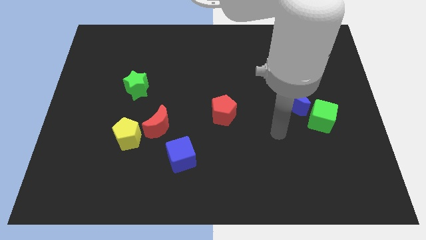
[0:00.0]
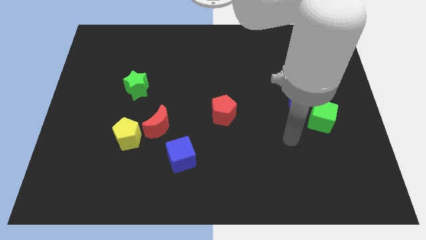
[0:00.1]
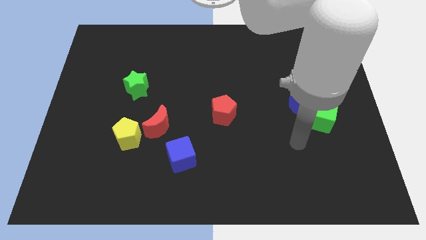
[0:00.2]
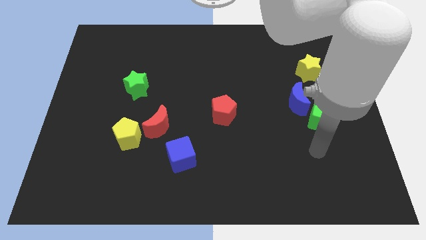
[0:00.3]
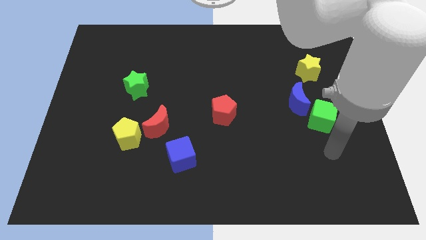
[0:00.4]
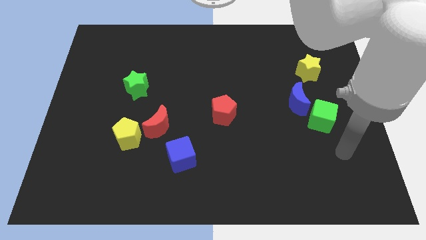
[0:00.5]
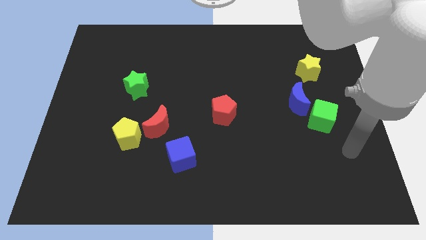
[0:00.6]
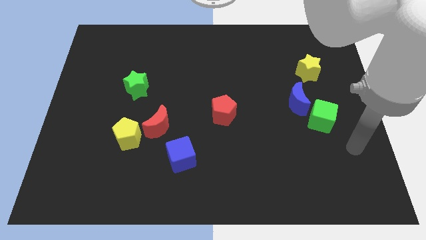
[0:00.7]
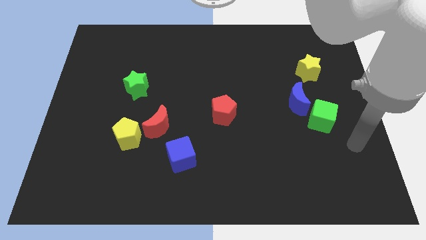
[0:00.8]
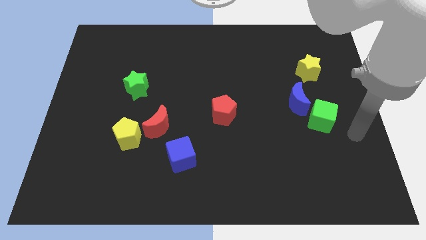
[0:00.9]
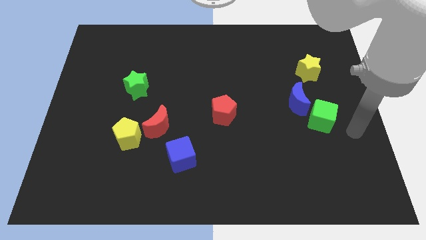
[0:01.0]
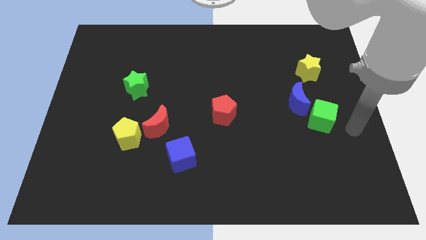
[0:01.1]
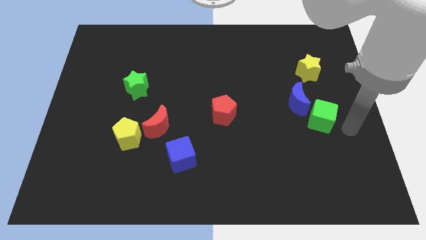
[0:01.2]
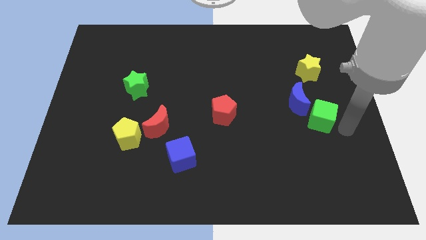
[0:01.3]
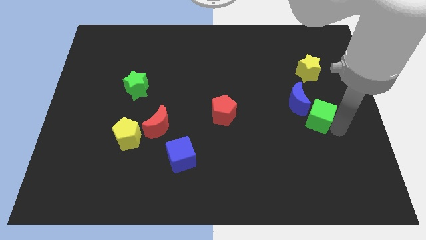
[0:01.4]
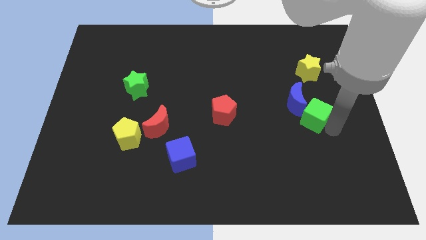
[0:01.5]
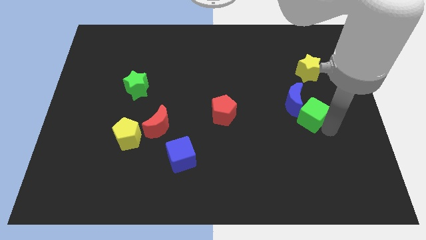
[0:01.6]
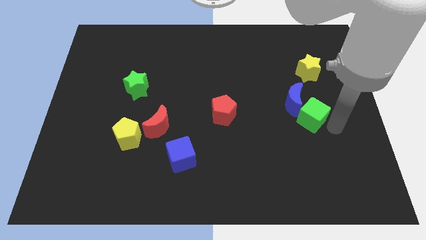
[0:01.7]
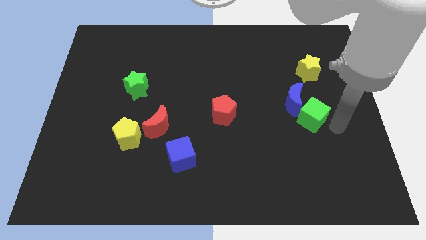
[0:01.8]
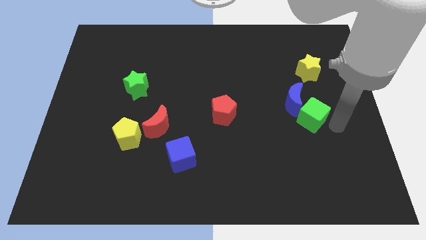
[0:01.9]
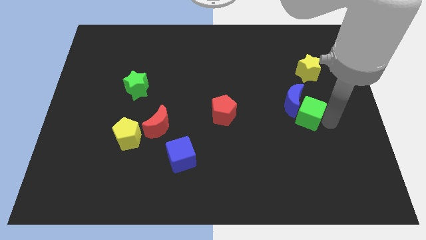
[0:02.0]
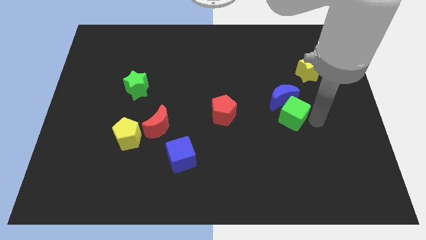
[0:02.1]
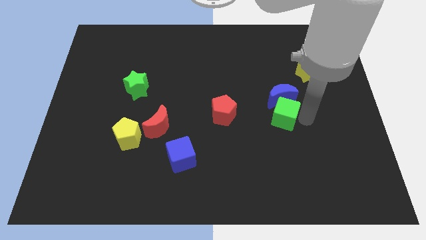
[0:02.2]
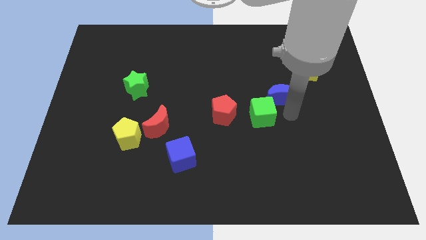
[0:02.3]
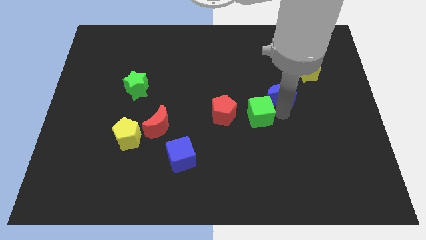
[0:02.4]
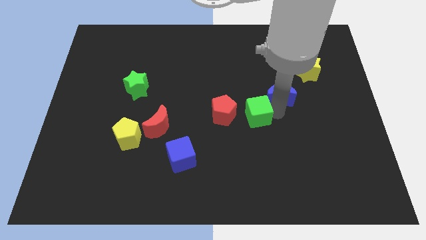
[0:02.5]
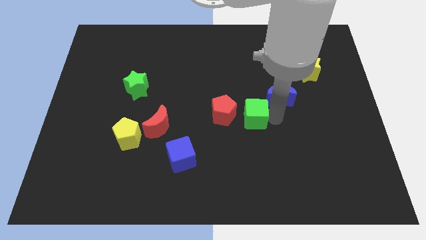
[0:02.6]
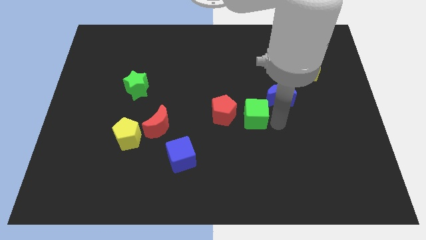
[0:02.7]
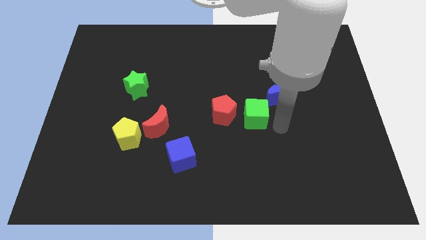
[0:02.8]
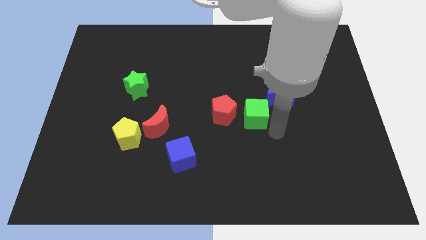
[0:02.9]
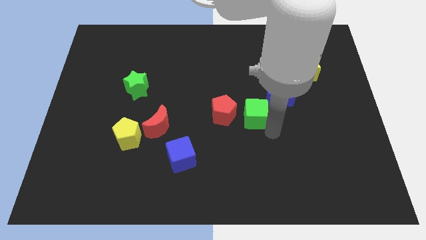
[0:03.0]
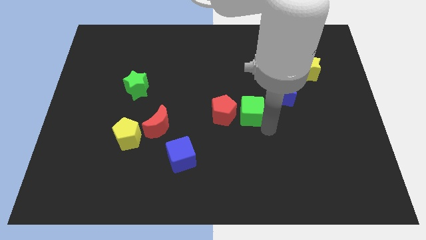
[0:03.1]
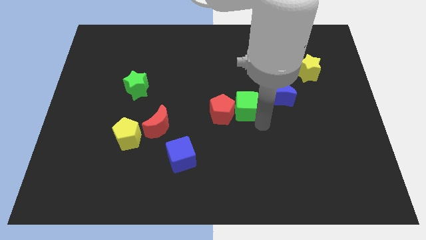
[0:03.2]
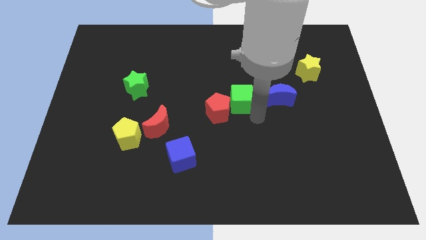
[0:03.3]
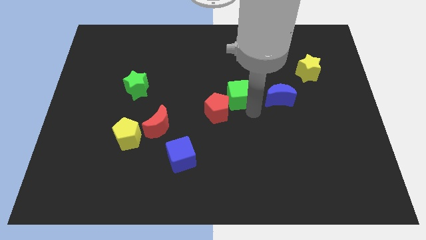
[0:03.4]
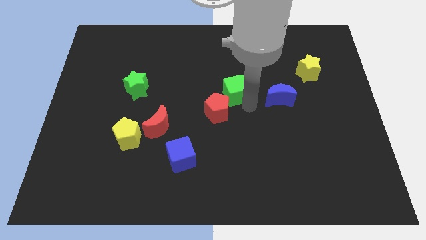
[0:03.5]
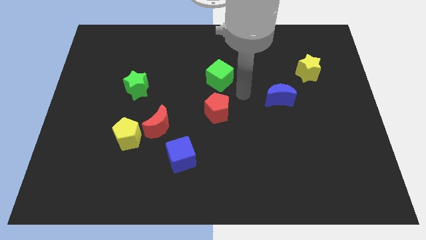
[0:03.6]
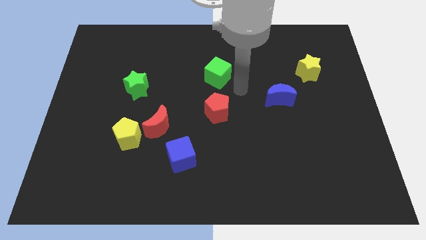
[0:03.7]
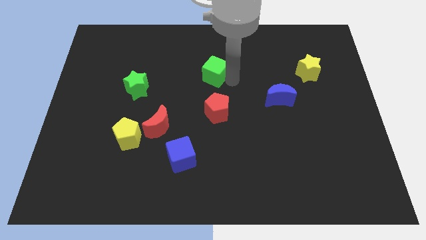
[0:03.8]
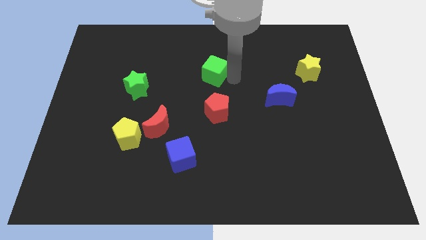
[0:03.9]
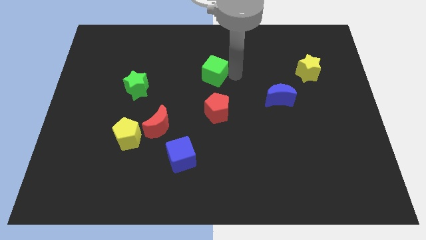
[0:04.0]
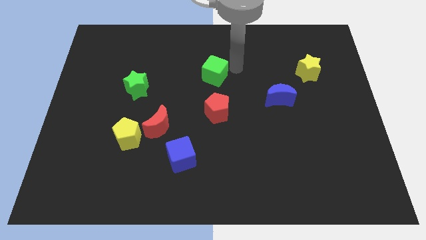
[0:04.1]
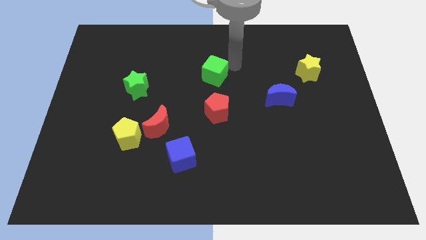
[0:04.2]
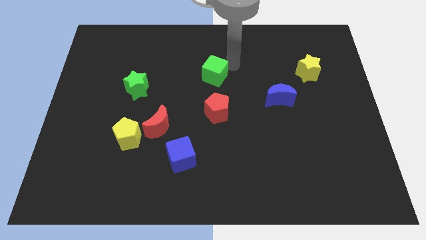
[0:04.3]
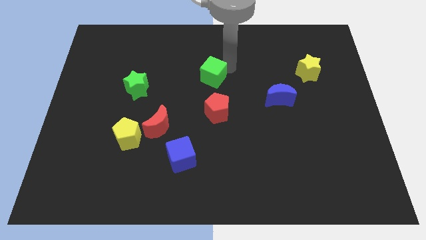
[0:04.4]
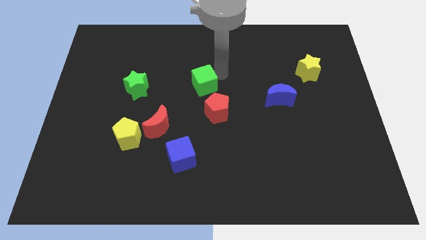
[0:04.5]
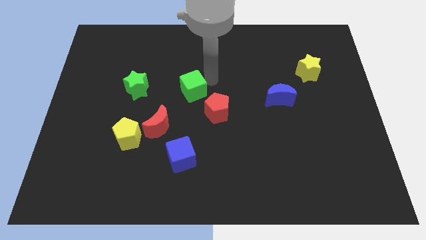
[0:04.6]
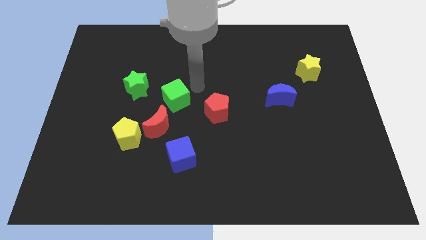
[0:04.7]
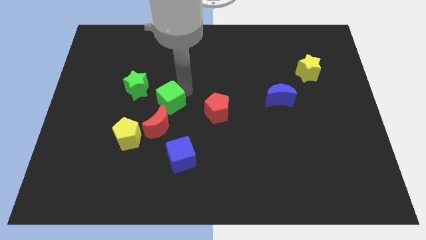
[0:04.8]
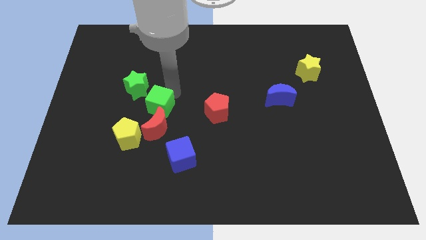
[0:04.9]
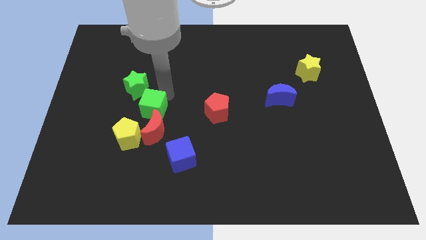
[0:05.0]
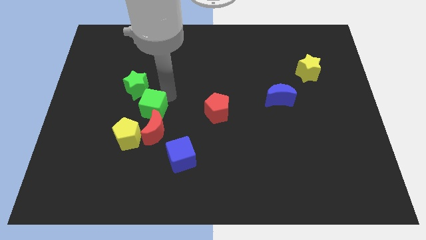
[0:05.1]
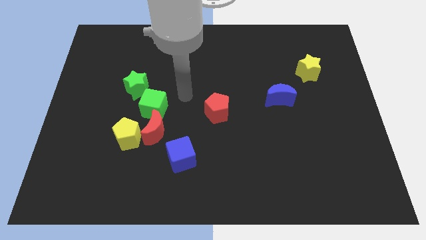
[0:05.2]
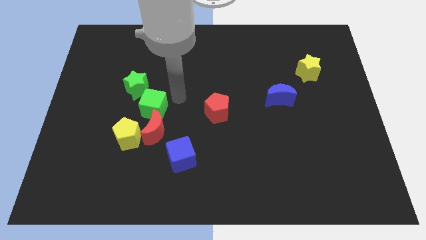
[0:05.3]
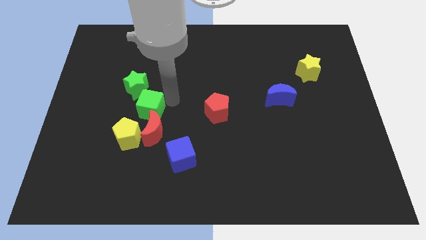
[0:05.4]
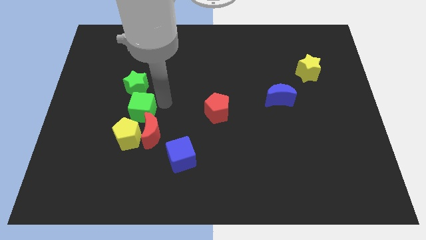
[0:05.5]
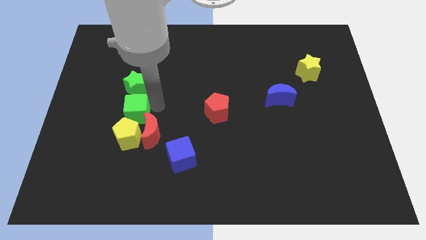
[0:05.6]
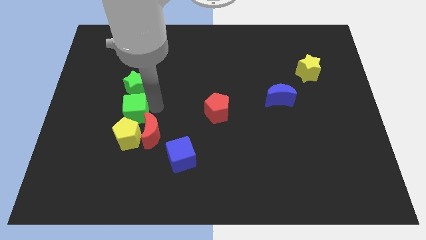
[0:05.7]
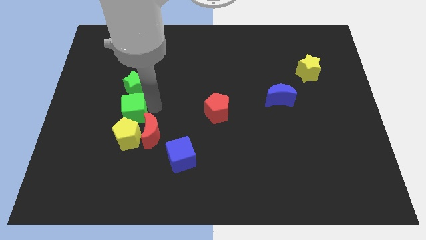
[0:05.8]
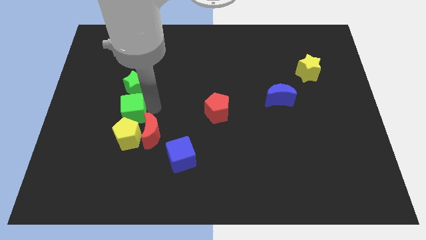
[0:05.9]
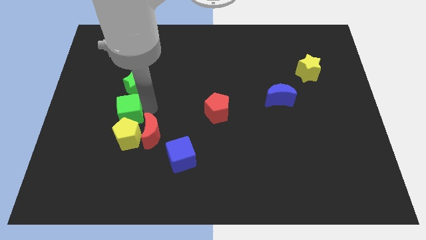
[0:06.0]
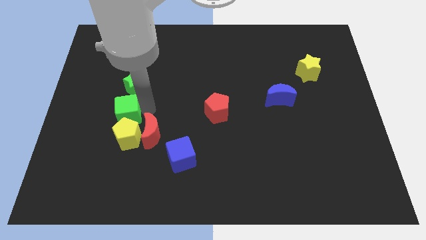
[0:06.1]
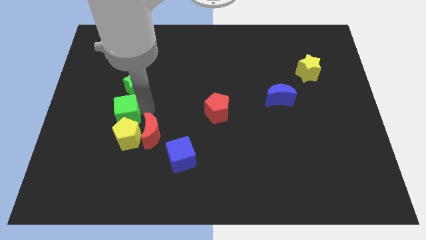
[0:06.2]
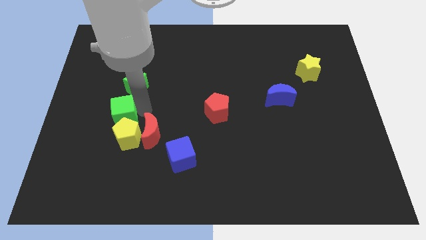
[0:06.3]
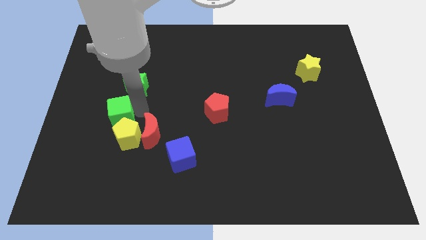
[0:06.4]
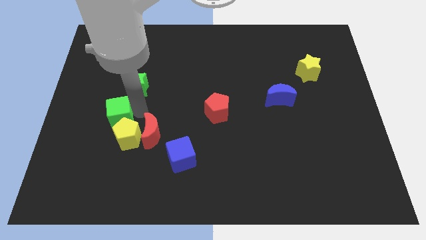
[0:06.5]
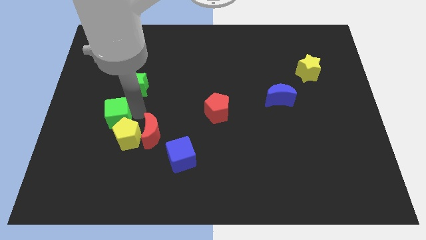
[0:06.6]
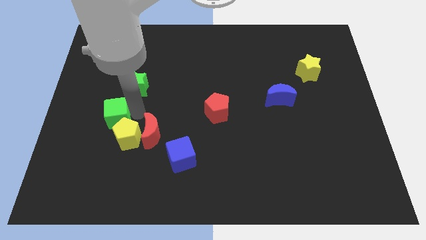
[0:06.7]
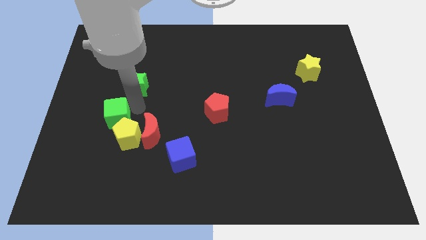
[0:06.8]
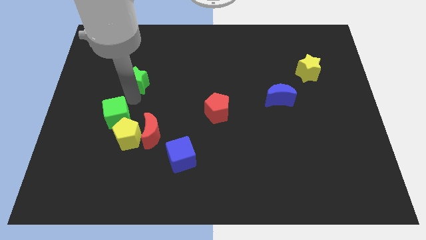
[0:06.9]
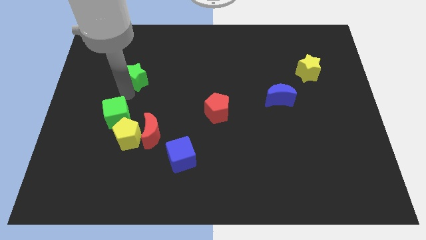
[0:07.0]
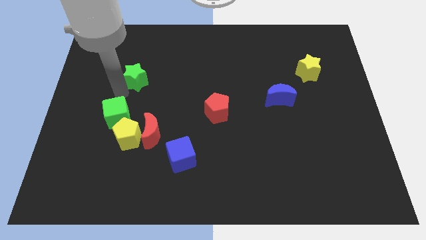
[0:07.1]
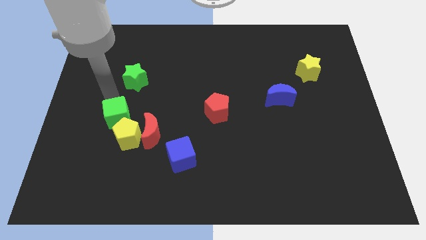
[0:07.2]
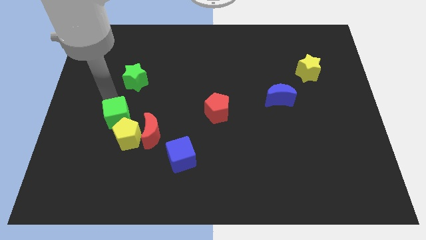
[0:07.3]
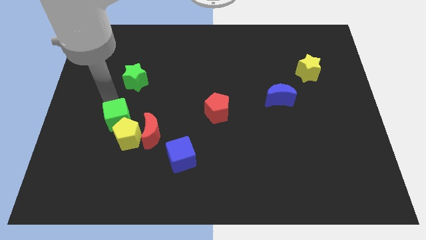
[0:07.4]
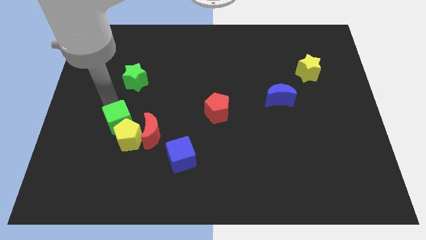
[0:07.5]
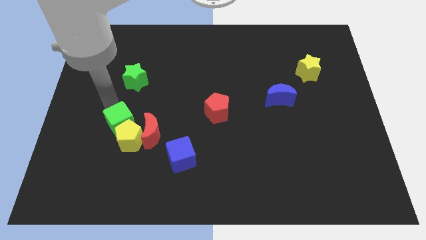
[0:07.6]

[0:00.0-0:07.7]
slide the green cube next to the yellow pentagon

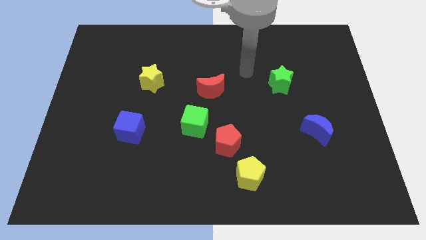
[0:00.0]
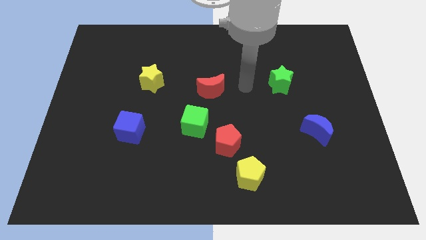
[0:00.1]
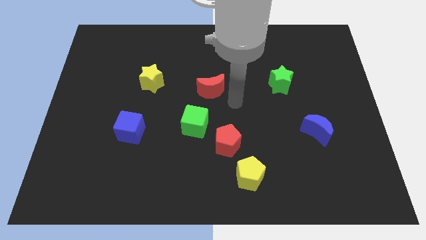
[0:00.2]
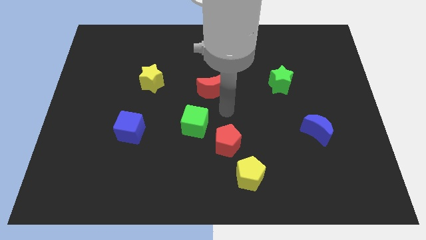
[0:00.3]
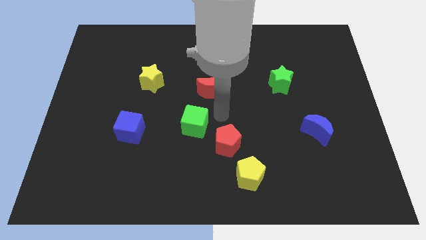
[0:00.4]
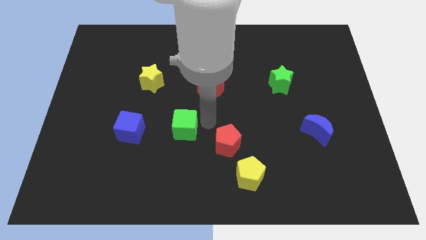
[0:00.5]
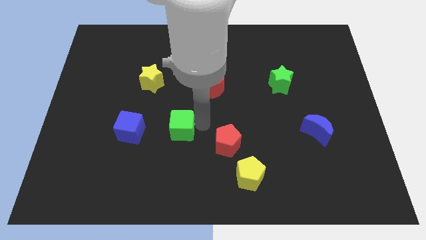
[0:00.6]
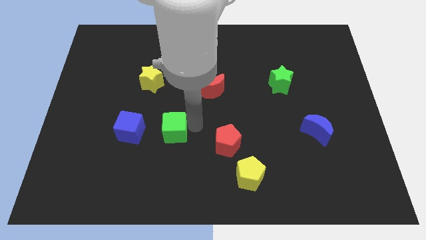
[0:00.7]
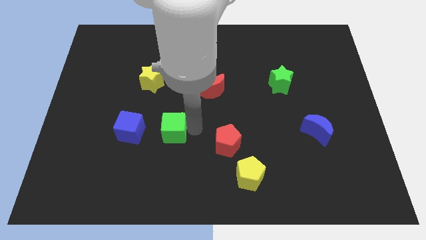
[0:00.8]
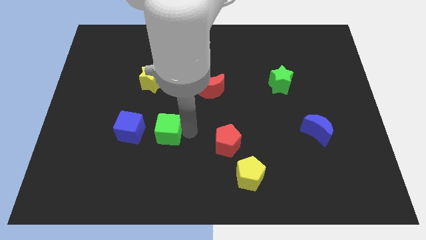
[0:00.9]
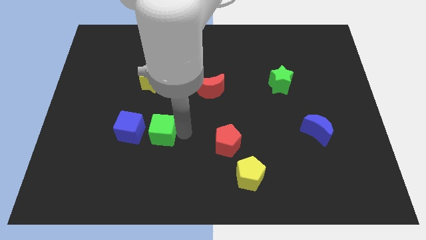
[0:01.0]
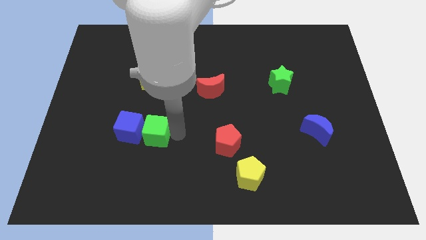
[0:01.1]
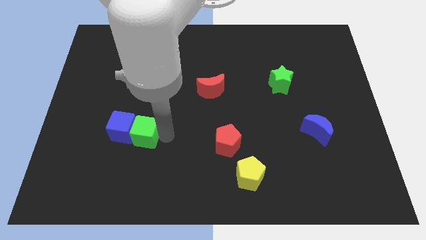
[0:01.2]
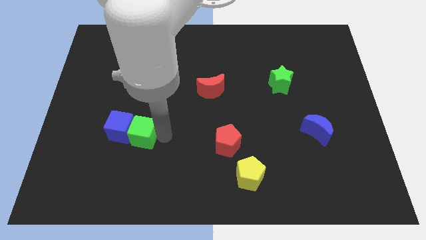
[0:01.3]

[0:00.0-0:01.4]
put the green cube close to the blue cube
